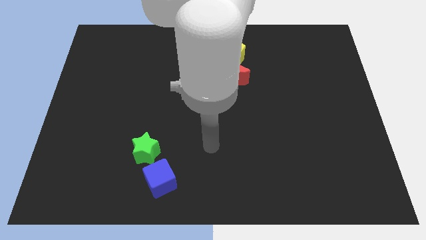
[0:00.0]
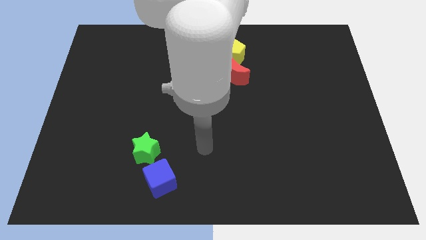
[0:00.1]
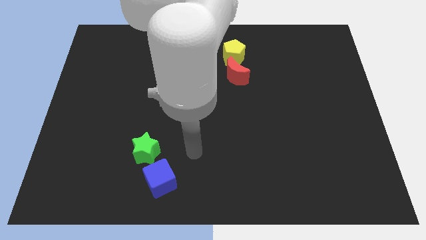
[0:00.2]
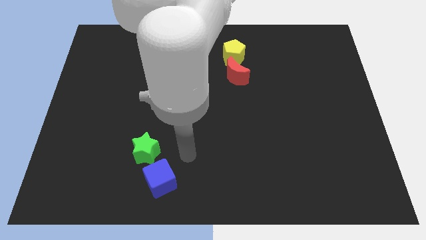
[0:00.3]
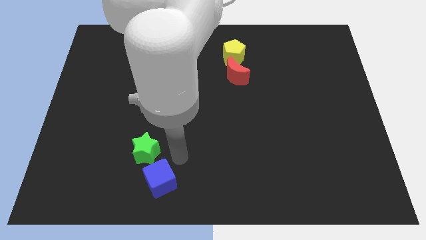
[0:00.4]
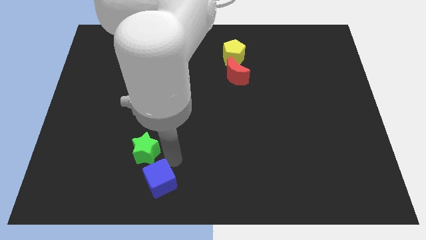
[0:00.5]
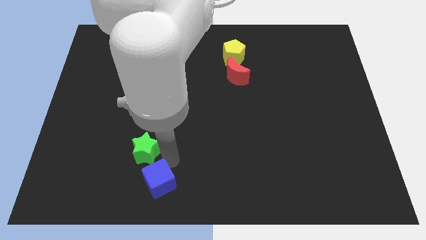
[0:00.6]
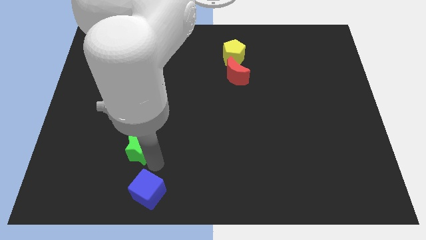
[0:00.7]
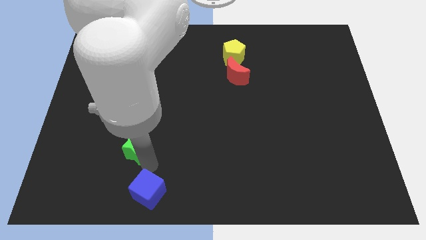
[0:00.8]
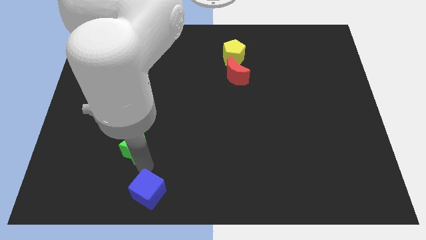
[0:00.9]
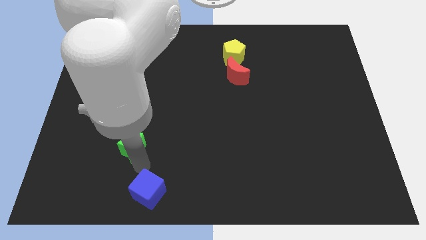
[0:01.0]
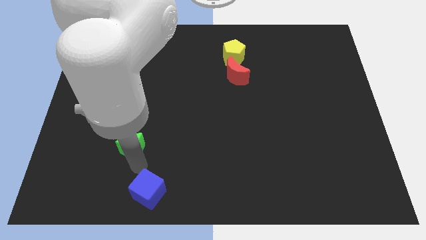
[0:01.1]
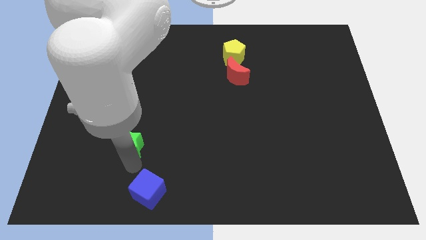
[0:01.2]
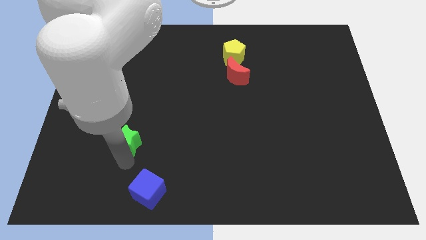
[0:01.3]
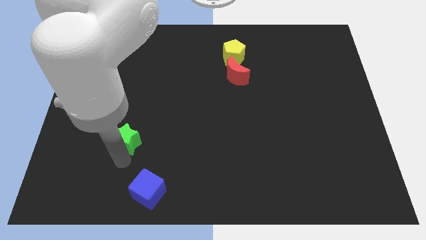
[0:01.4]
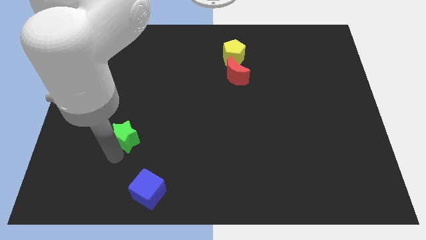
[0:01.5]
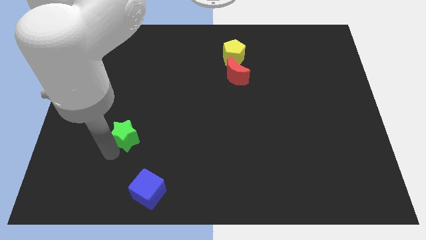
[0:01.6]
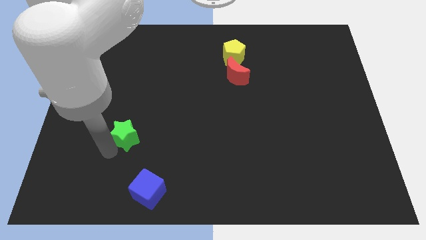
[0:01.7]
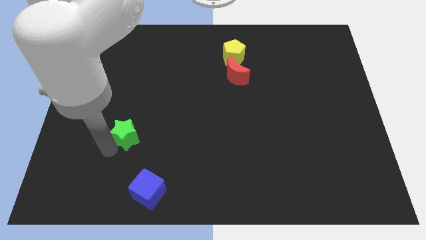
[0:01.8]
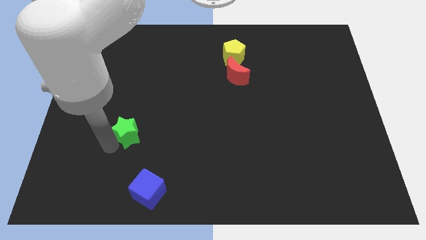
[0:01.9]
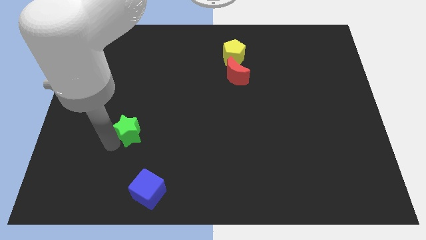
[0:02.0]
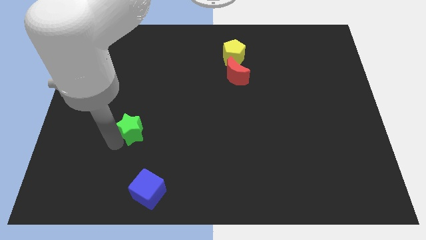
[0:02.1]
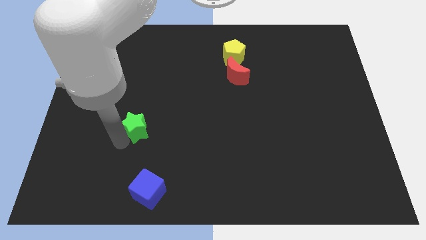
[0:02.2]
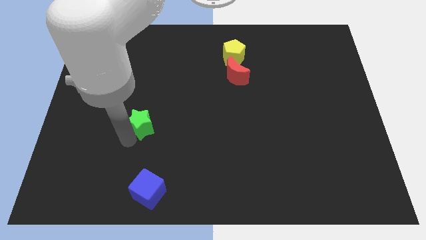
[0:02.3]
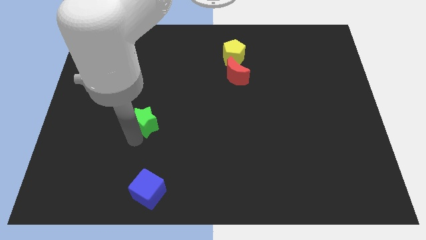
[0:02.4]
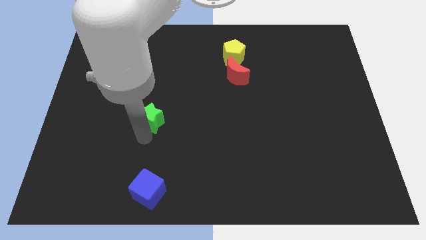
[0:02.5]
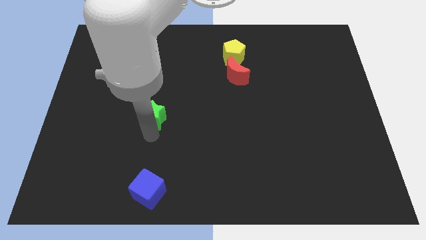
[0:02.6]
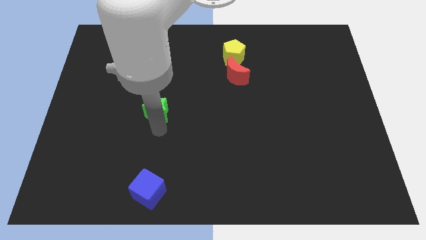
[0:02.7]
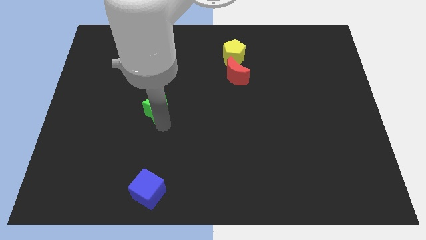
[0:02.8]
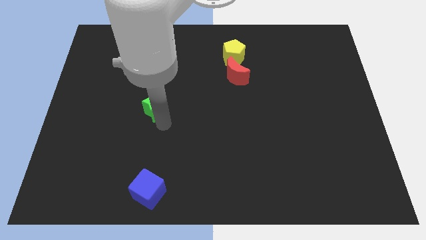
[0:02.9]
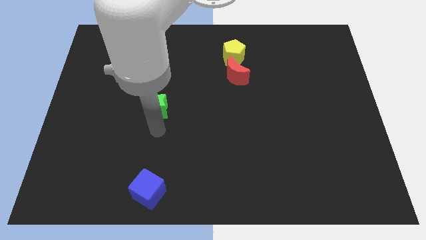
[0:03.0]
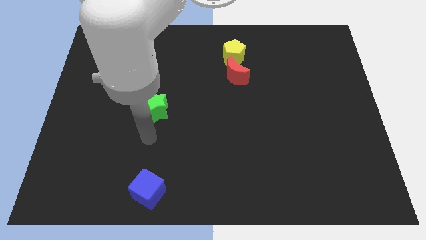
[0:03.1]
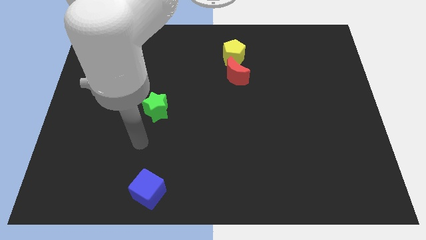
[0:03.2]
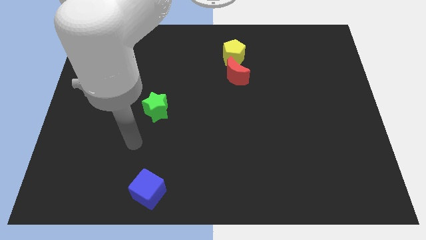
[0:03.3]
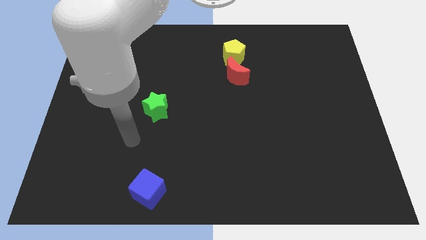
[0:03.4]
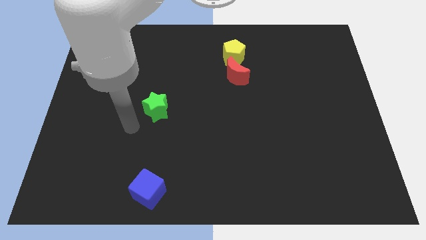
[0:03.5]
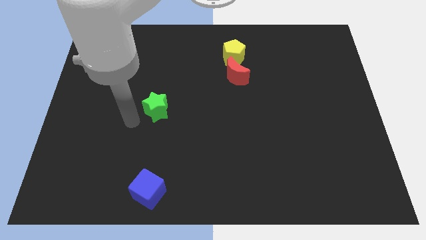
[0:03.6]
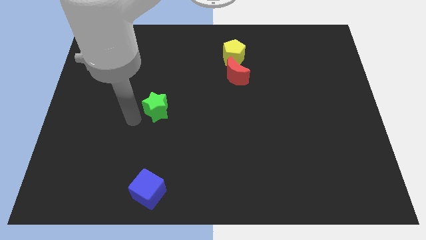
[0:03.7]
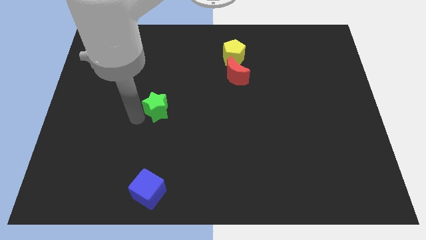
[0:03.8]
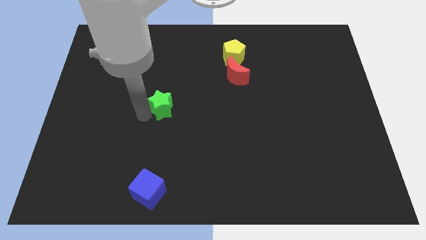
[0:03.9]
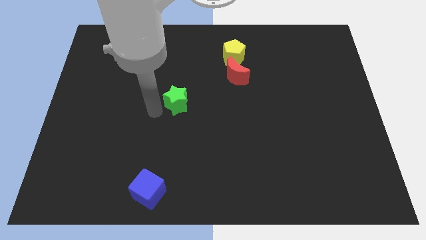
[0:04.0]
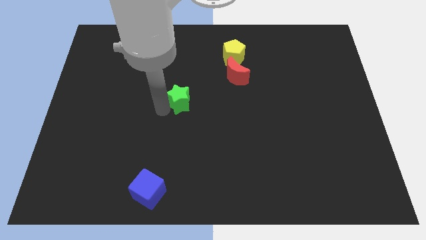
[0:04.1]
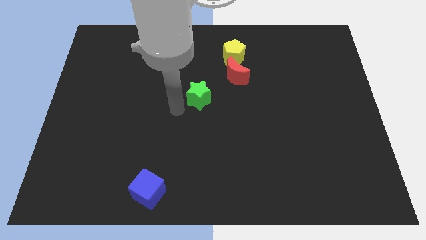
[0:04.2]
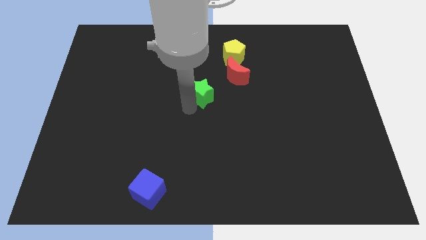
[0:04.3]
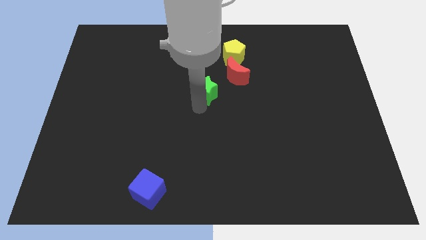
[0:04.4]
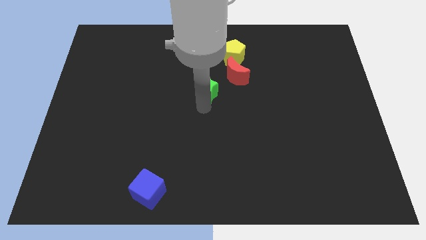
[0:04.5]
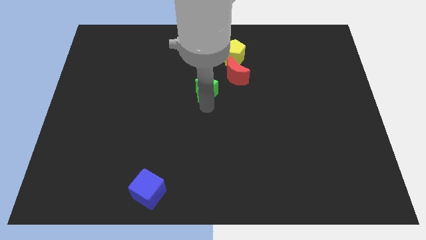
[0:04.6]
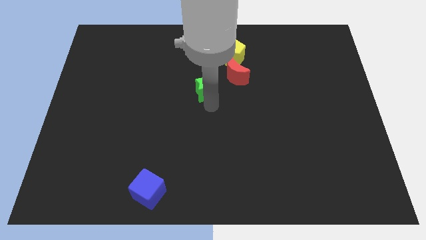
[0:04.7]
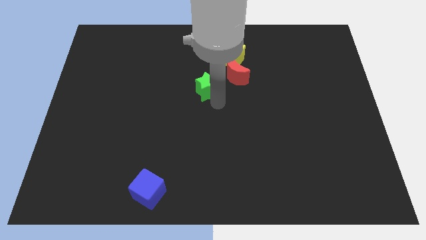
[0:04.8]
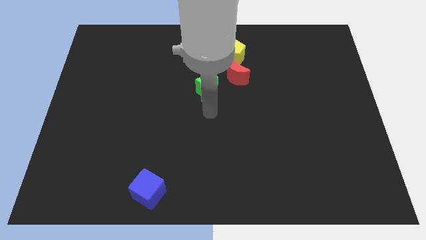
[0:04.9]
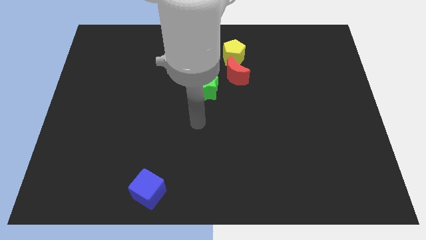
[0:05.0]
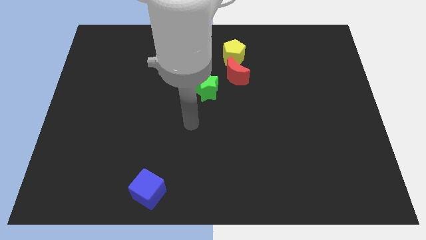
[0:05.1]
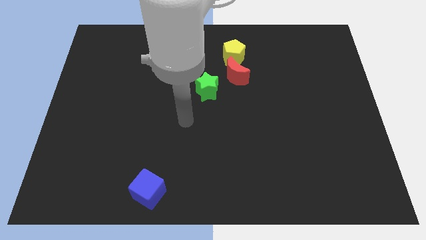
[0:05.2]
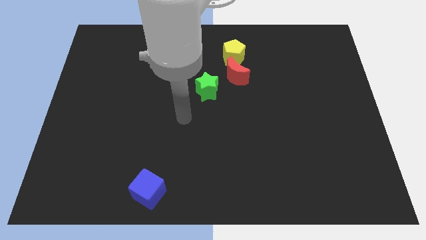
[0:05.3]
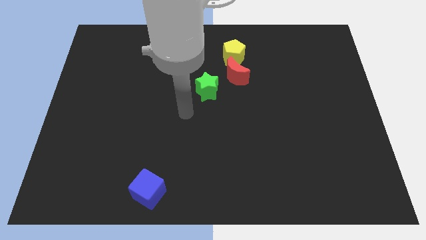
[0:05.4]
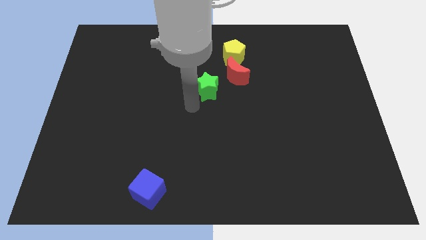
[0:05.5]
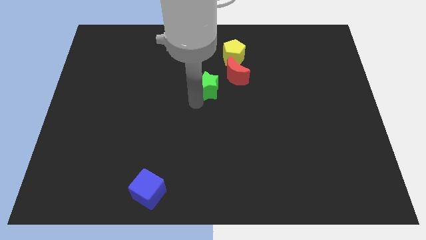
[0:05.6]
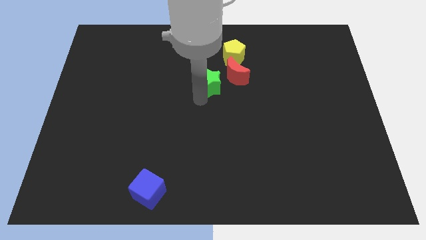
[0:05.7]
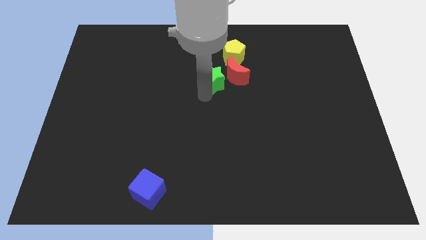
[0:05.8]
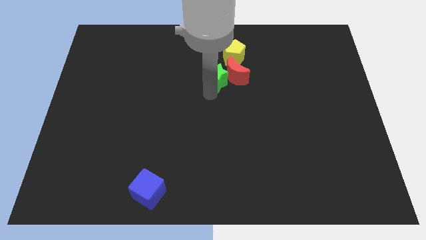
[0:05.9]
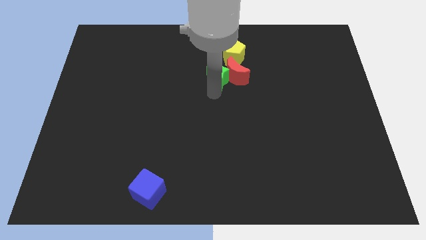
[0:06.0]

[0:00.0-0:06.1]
push the green star to the red block

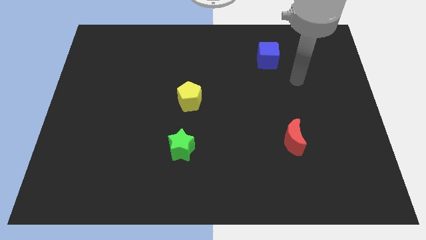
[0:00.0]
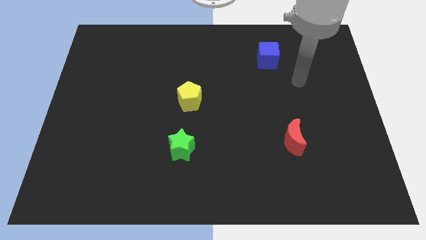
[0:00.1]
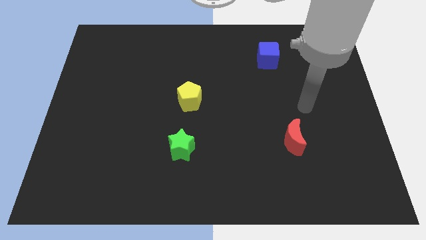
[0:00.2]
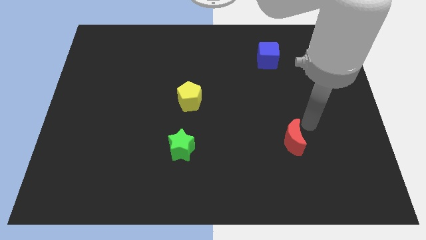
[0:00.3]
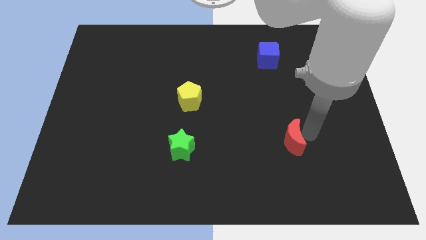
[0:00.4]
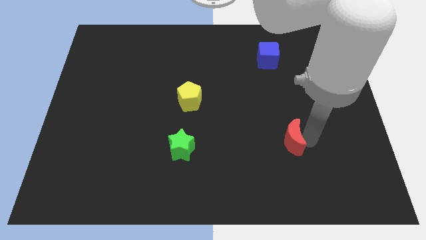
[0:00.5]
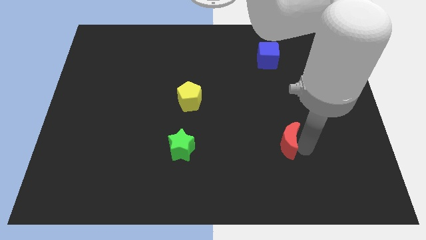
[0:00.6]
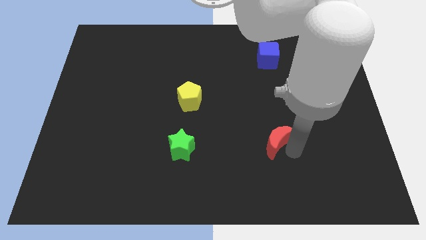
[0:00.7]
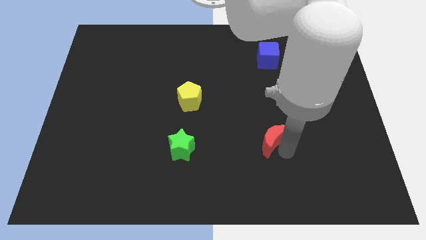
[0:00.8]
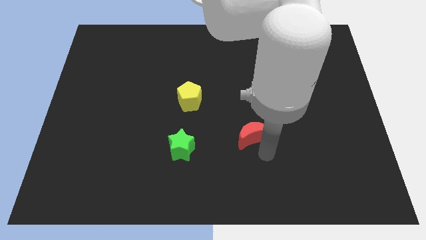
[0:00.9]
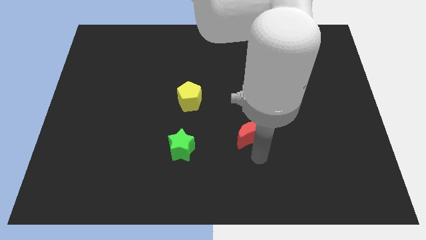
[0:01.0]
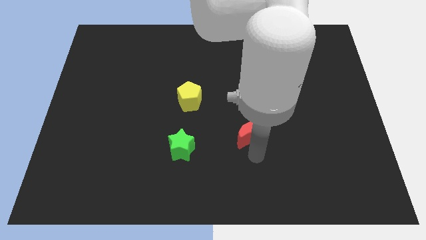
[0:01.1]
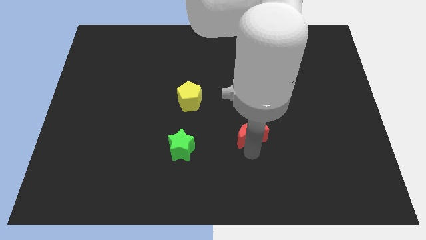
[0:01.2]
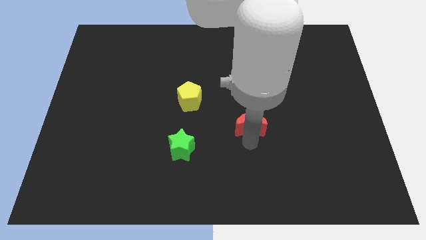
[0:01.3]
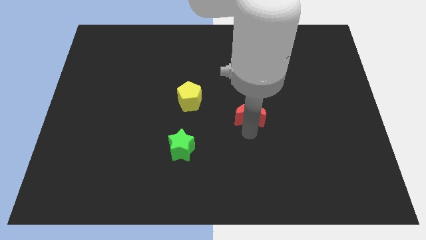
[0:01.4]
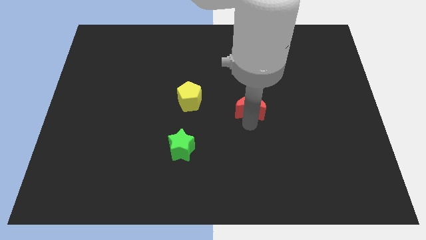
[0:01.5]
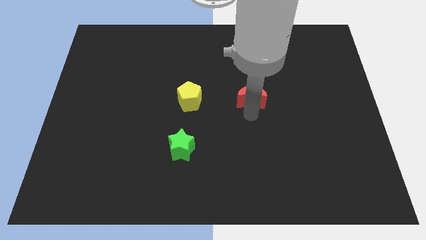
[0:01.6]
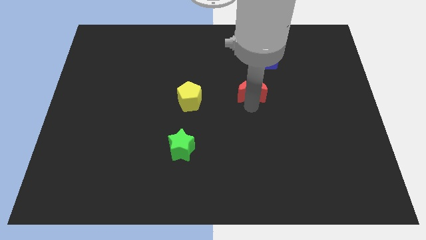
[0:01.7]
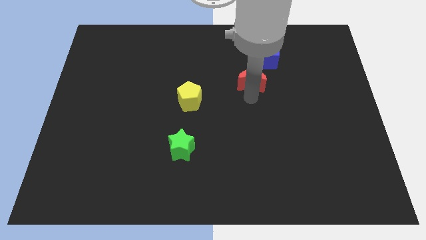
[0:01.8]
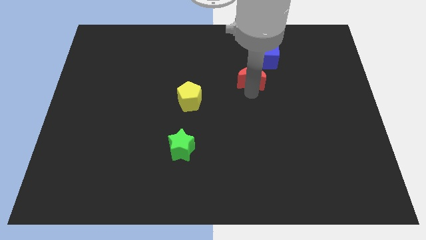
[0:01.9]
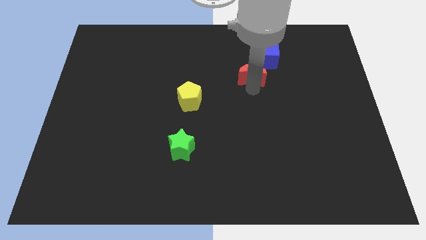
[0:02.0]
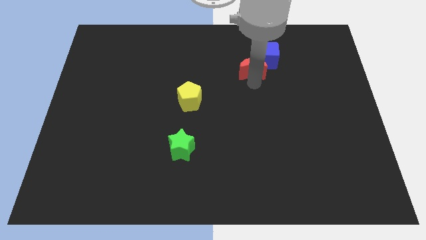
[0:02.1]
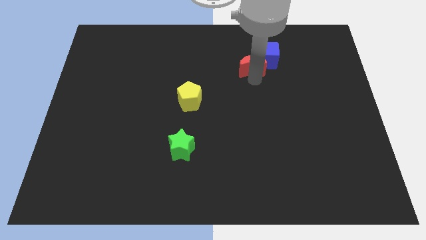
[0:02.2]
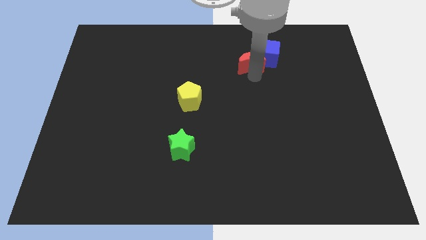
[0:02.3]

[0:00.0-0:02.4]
slide the red block towards the cube
